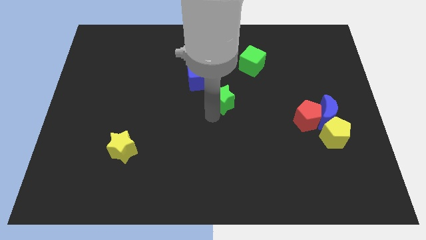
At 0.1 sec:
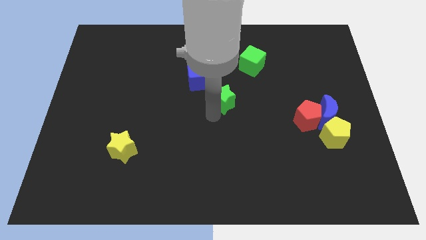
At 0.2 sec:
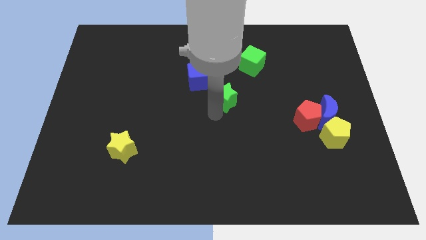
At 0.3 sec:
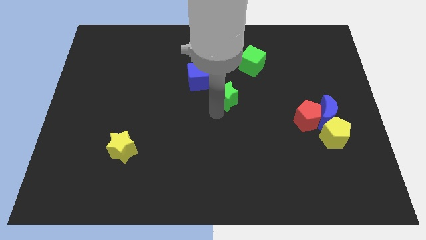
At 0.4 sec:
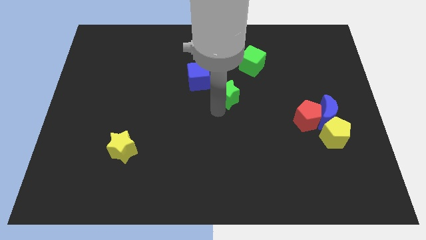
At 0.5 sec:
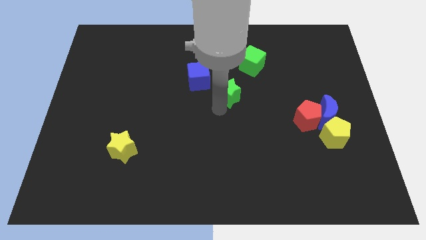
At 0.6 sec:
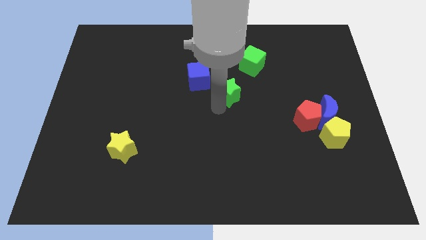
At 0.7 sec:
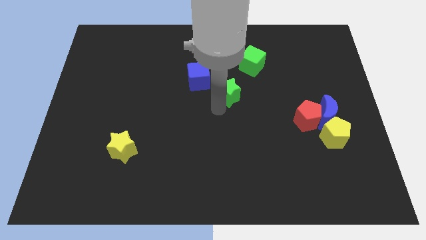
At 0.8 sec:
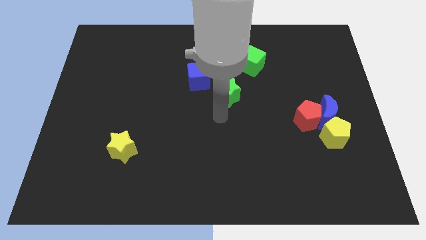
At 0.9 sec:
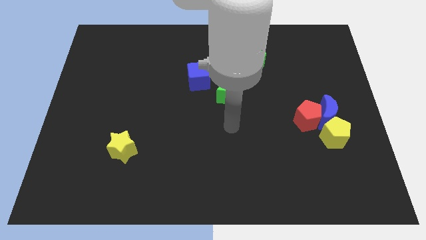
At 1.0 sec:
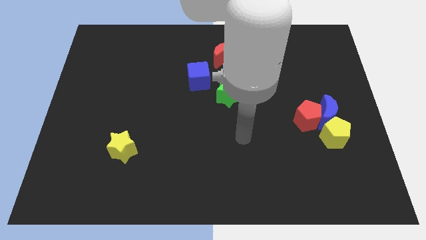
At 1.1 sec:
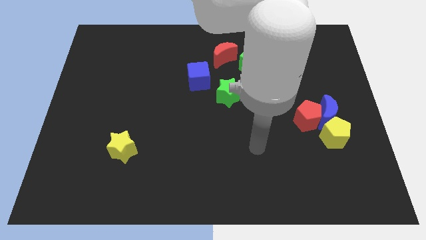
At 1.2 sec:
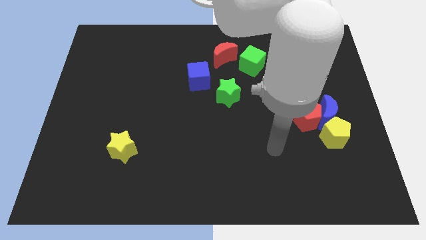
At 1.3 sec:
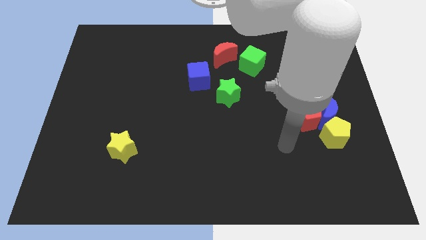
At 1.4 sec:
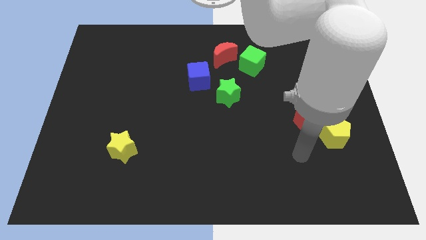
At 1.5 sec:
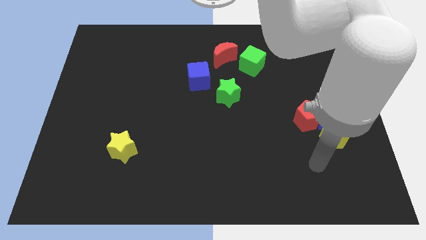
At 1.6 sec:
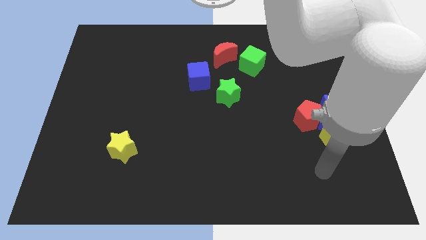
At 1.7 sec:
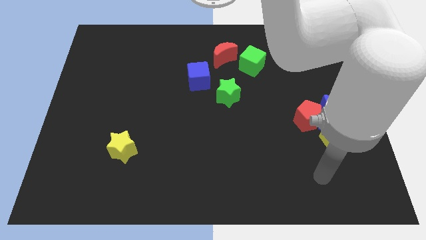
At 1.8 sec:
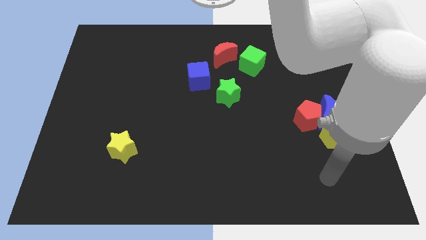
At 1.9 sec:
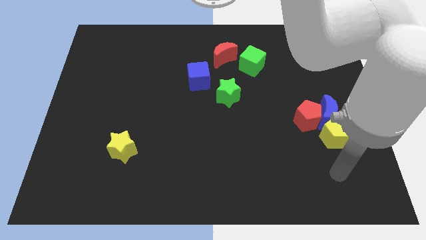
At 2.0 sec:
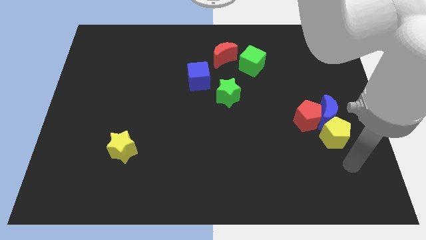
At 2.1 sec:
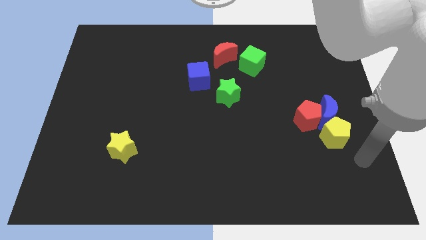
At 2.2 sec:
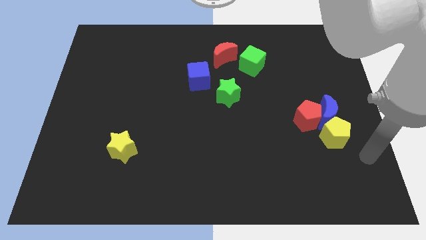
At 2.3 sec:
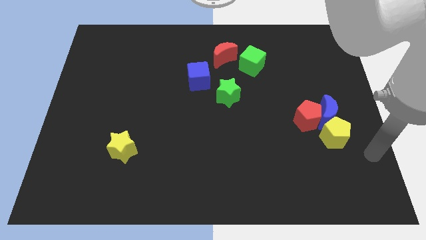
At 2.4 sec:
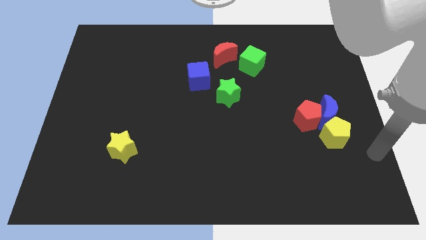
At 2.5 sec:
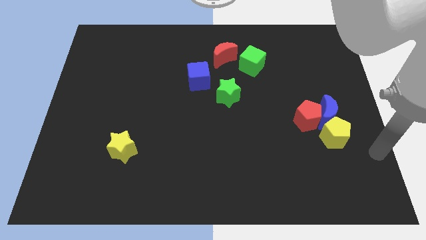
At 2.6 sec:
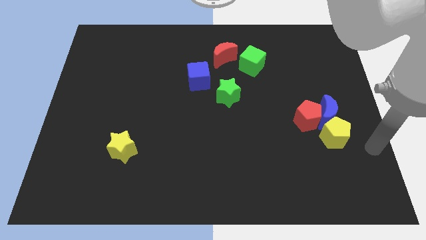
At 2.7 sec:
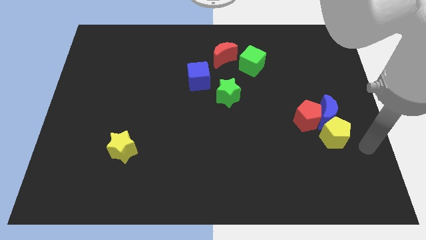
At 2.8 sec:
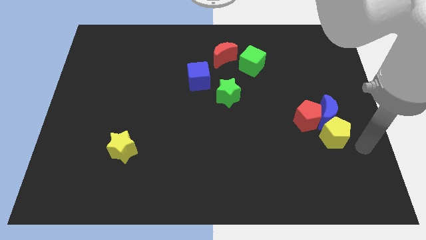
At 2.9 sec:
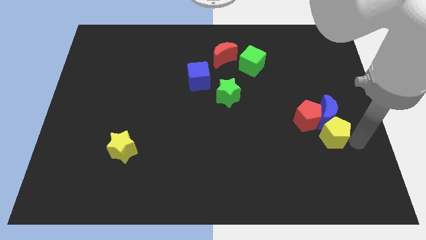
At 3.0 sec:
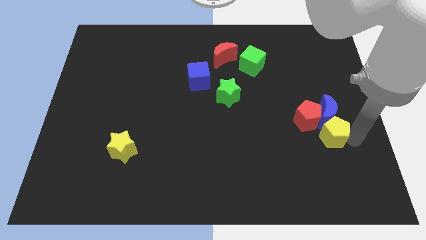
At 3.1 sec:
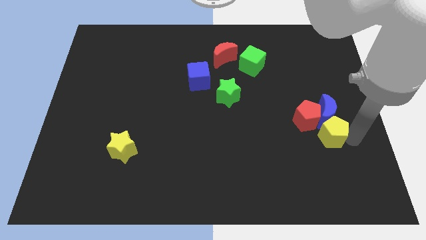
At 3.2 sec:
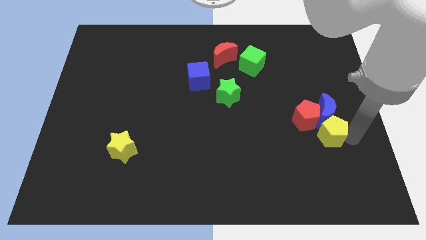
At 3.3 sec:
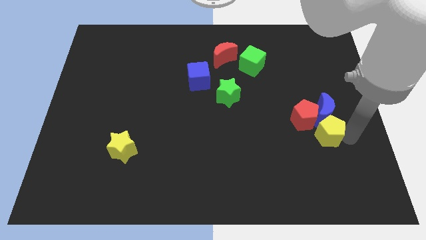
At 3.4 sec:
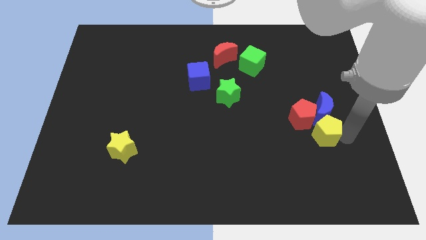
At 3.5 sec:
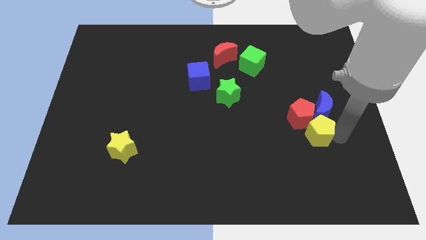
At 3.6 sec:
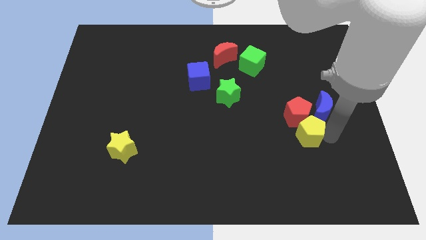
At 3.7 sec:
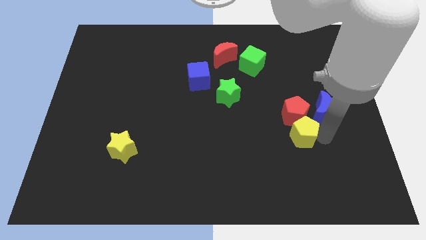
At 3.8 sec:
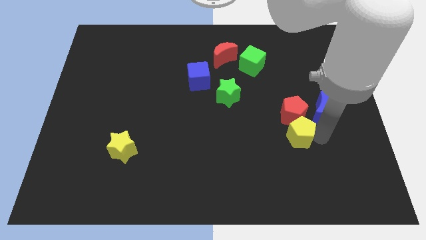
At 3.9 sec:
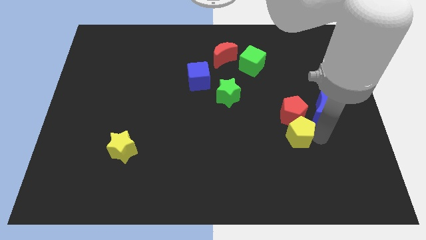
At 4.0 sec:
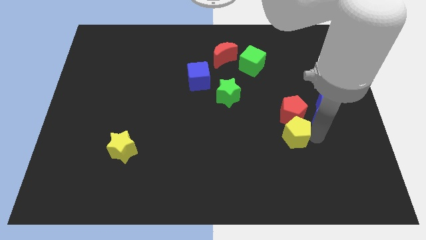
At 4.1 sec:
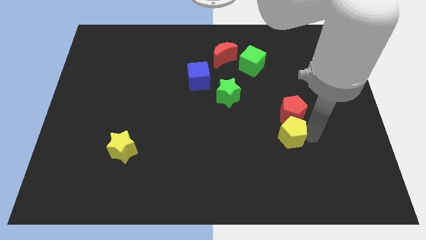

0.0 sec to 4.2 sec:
place the yellow pentagon to the bottom of red pentagon

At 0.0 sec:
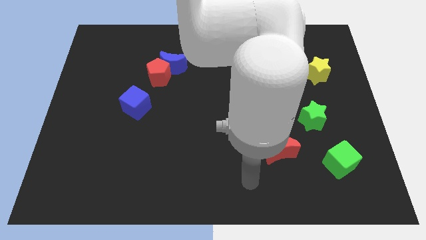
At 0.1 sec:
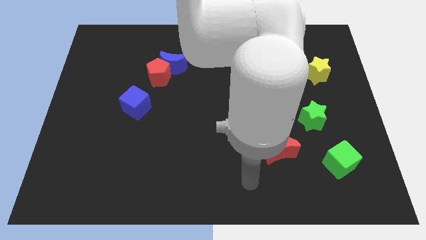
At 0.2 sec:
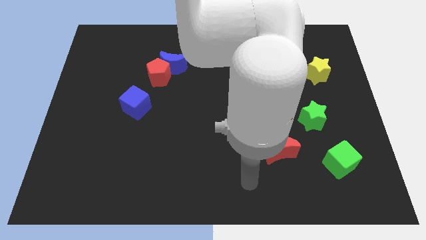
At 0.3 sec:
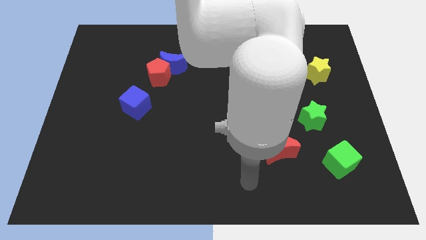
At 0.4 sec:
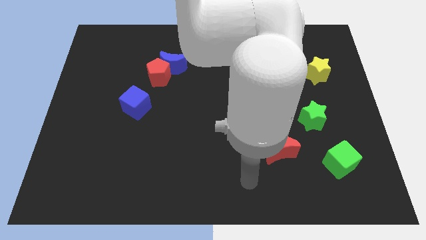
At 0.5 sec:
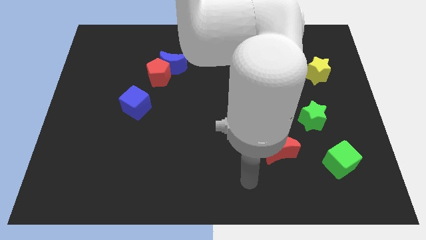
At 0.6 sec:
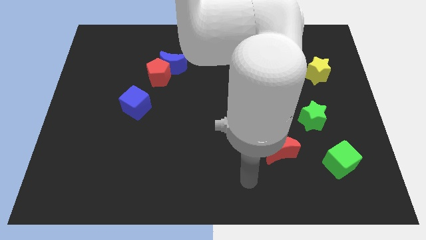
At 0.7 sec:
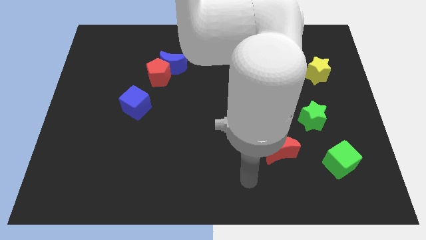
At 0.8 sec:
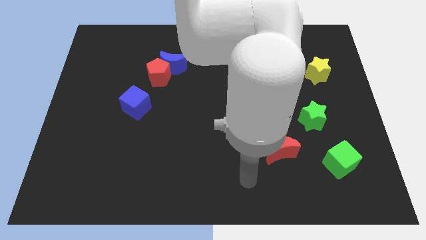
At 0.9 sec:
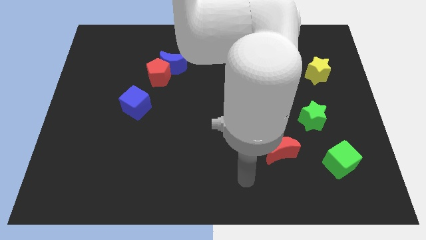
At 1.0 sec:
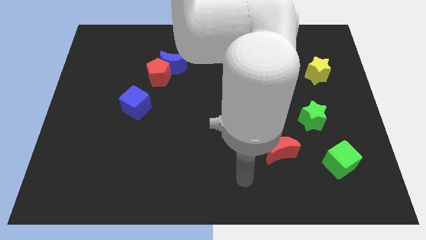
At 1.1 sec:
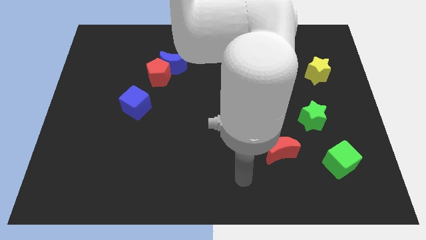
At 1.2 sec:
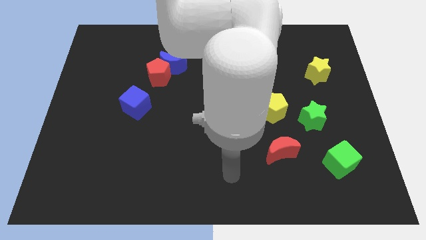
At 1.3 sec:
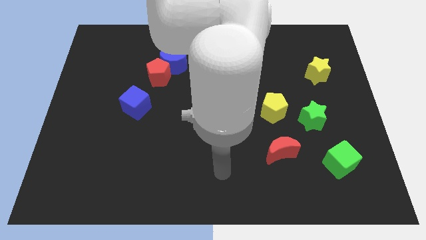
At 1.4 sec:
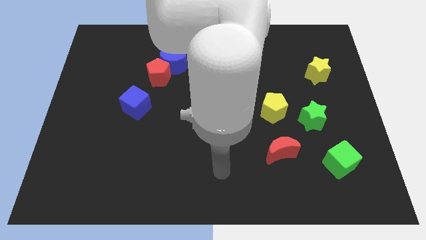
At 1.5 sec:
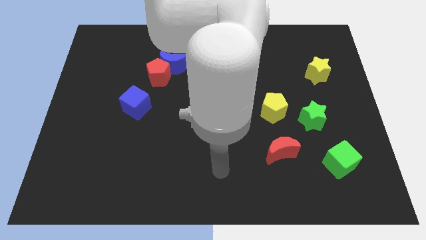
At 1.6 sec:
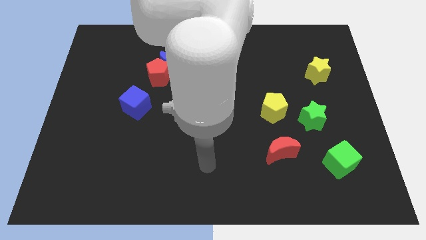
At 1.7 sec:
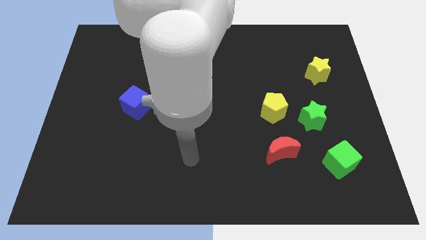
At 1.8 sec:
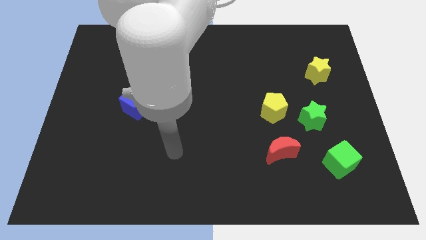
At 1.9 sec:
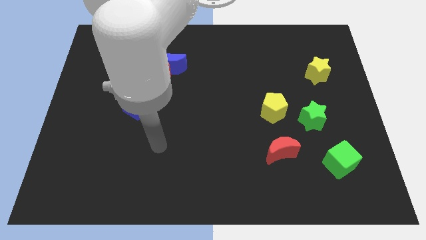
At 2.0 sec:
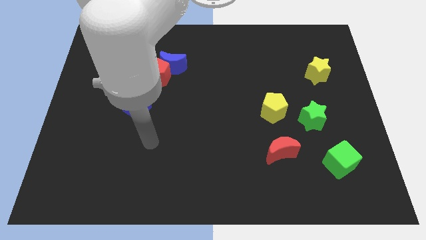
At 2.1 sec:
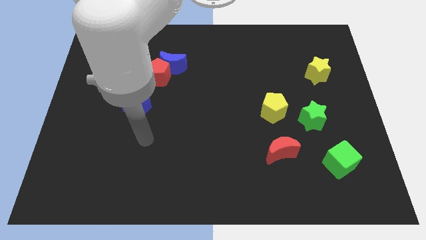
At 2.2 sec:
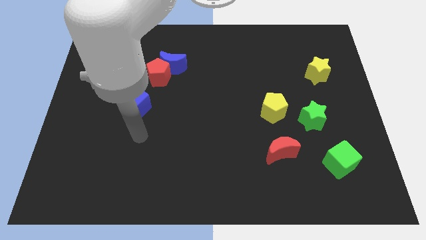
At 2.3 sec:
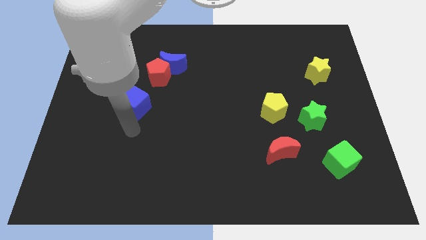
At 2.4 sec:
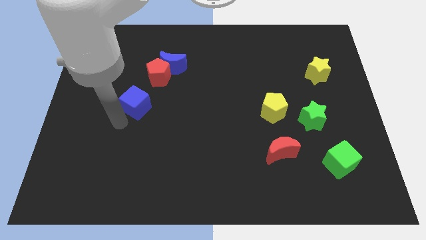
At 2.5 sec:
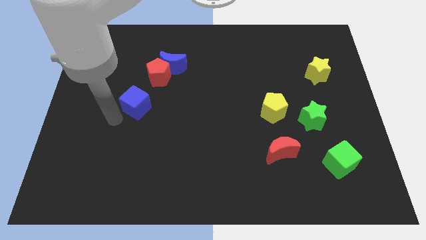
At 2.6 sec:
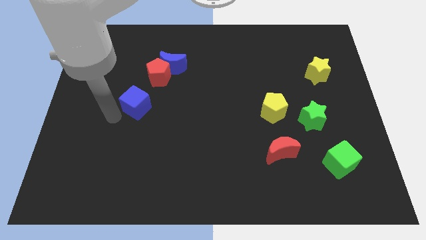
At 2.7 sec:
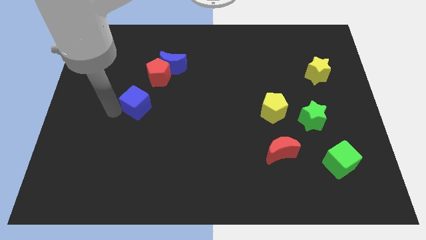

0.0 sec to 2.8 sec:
place your arm left to blue cube

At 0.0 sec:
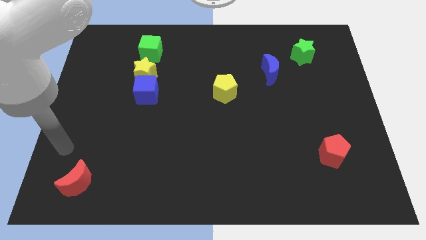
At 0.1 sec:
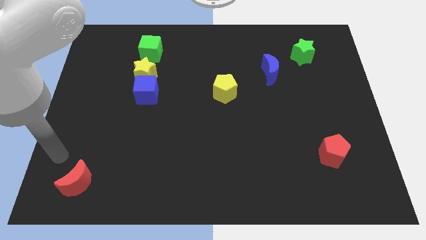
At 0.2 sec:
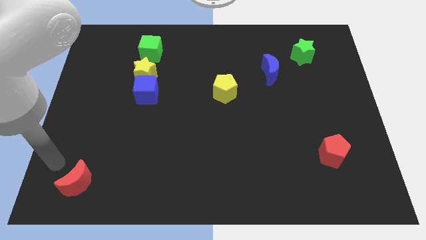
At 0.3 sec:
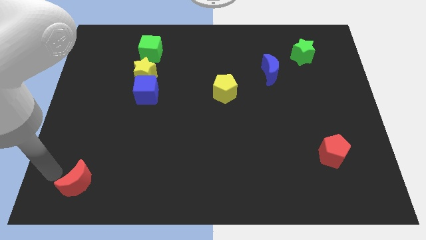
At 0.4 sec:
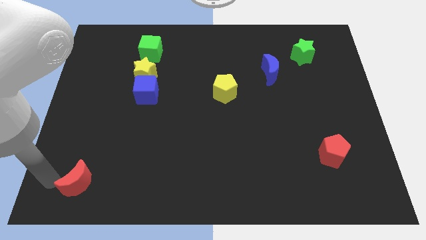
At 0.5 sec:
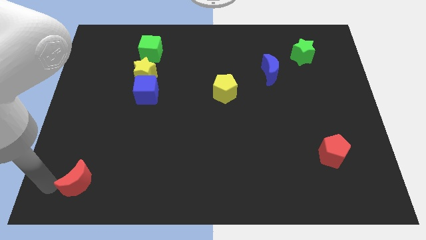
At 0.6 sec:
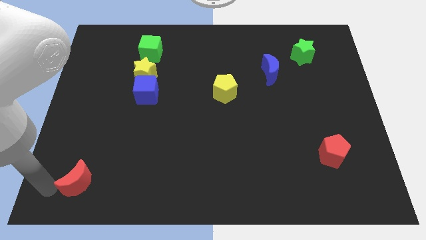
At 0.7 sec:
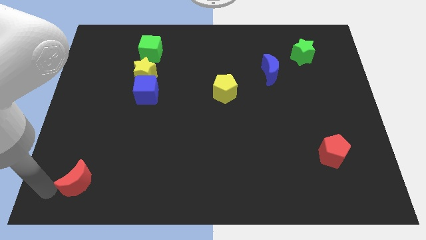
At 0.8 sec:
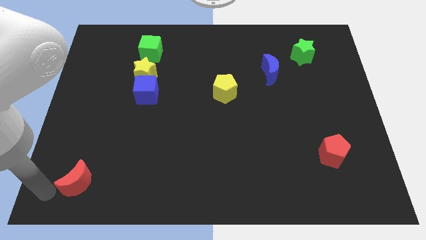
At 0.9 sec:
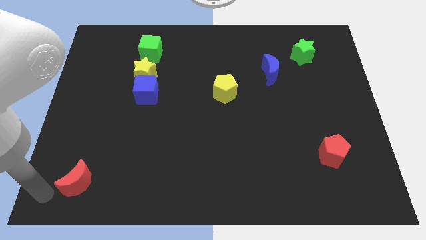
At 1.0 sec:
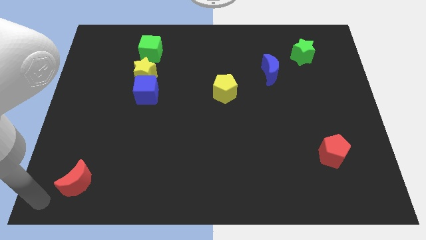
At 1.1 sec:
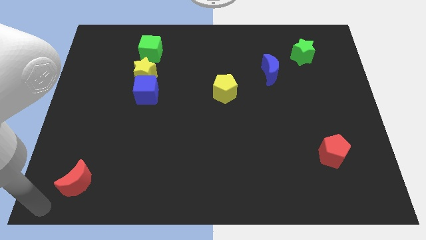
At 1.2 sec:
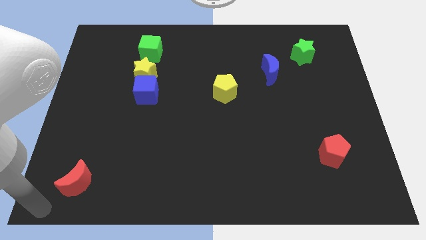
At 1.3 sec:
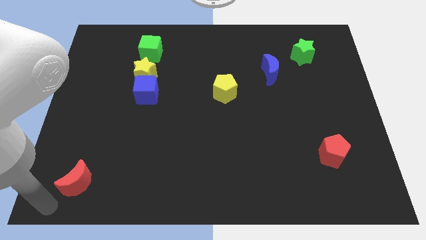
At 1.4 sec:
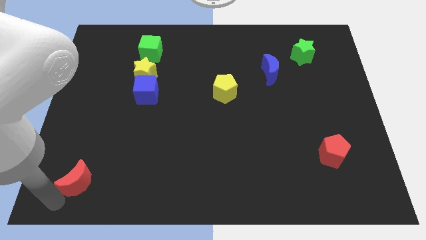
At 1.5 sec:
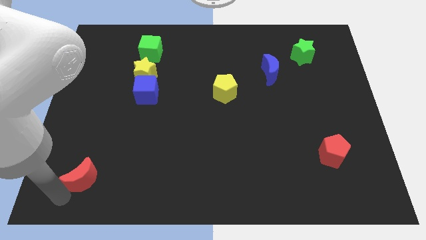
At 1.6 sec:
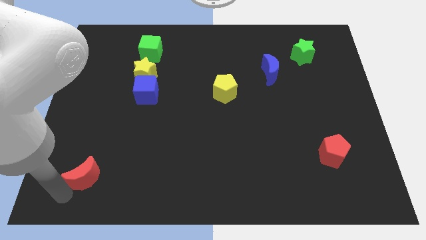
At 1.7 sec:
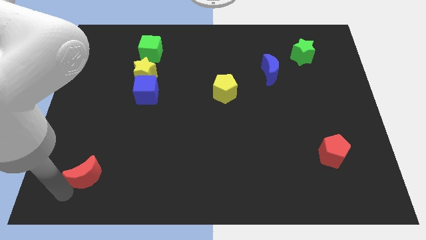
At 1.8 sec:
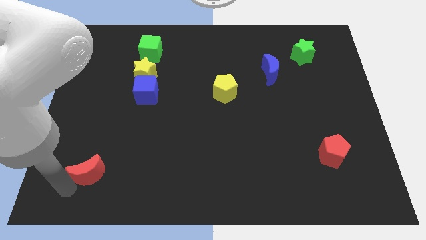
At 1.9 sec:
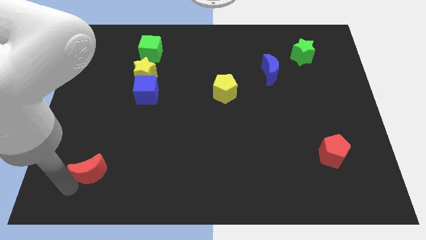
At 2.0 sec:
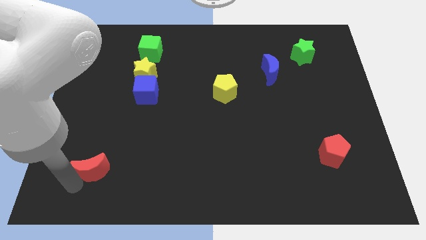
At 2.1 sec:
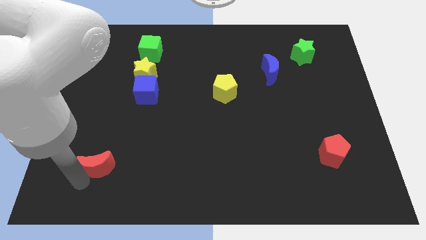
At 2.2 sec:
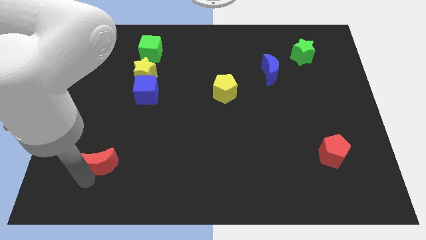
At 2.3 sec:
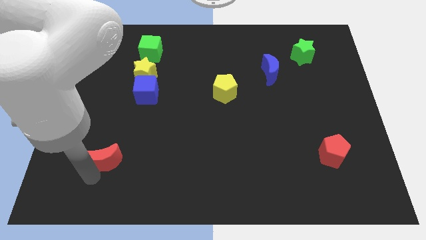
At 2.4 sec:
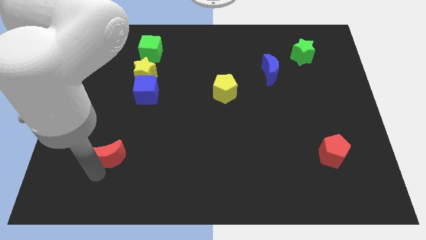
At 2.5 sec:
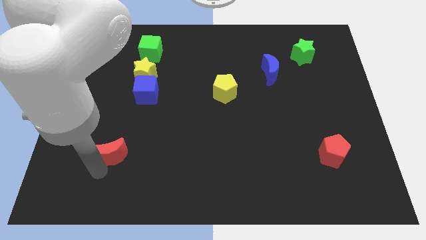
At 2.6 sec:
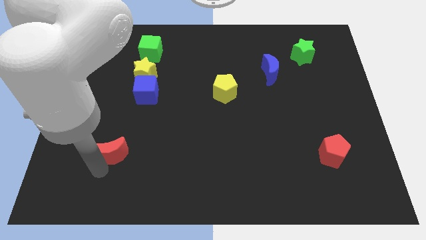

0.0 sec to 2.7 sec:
move the red crescent horizontal to the red pentagon
